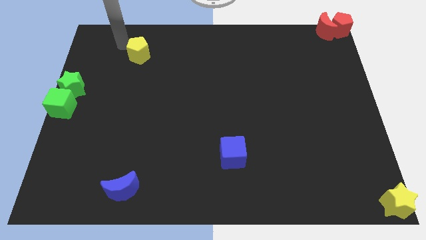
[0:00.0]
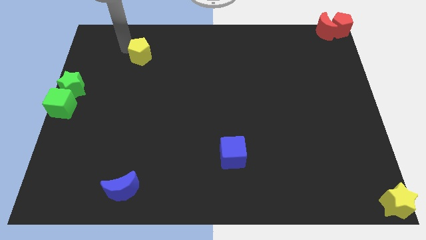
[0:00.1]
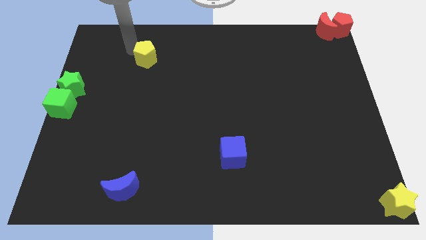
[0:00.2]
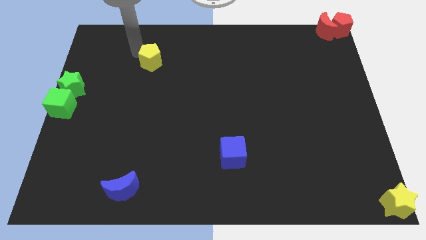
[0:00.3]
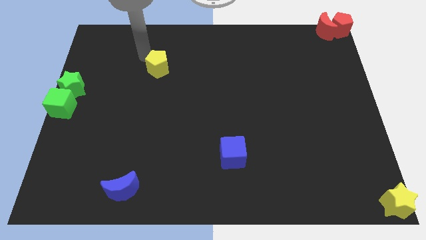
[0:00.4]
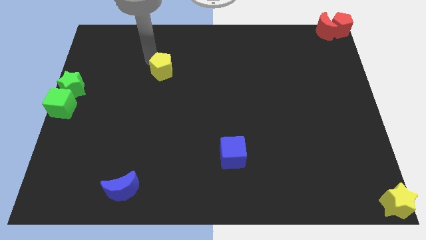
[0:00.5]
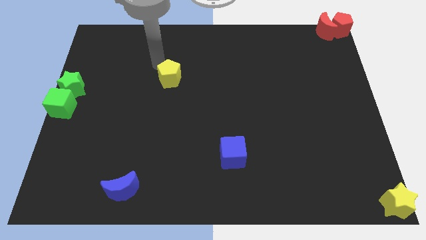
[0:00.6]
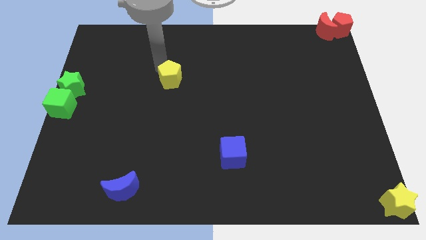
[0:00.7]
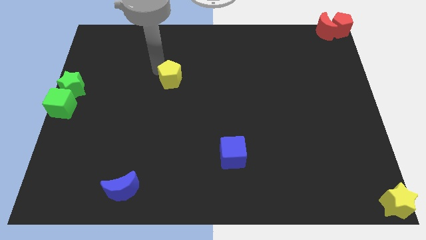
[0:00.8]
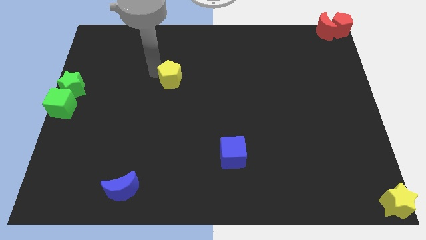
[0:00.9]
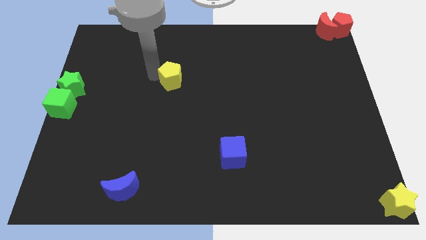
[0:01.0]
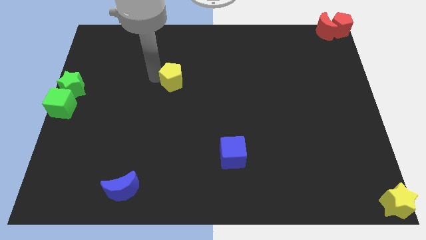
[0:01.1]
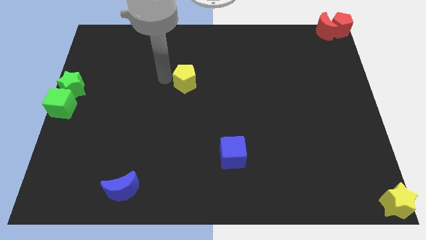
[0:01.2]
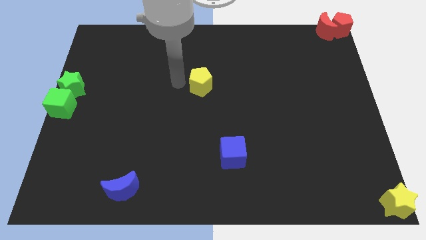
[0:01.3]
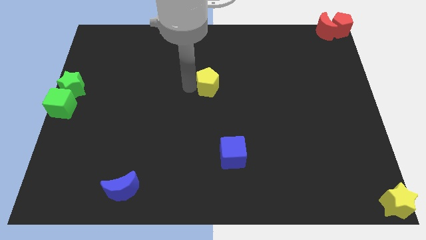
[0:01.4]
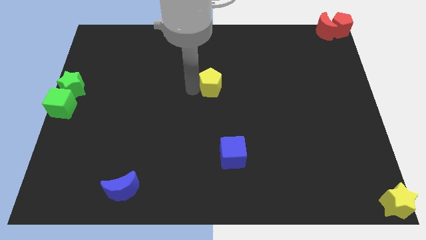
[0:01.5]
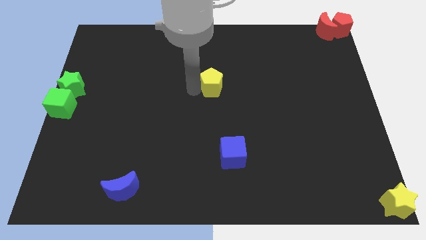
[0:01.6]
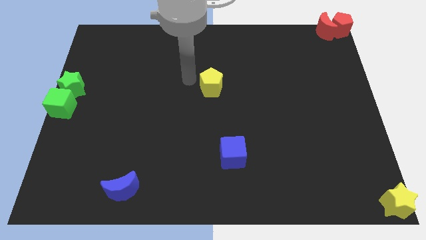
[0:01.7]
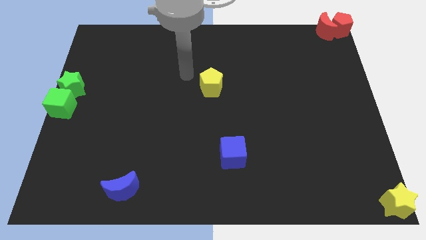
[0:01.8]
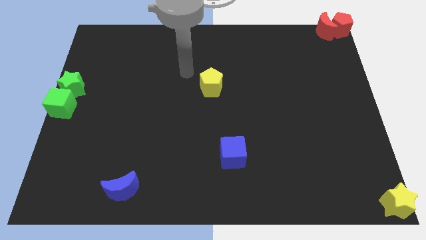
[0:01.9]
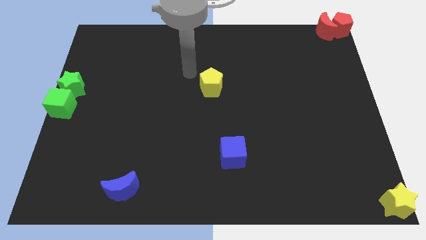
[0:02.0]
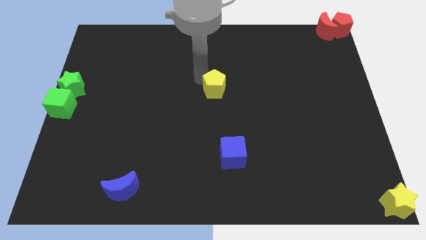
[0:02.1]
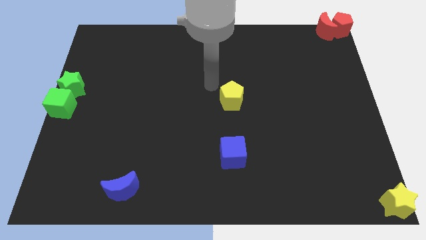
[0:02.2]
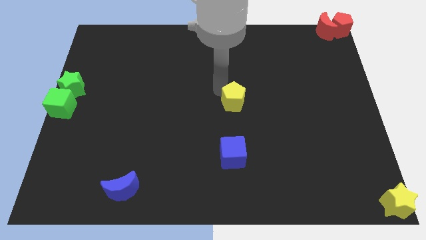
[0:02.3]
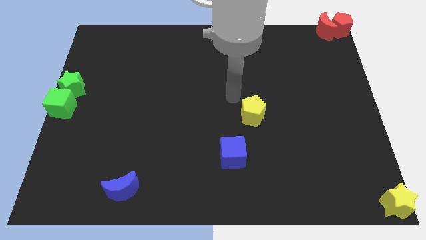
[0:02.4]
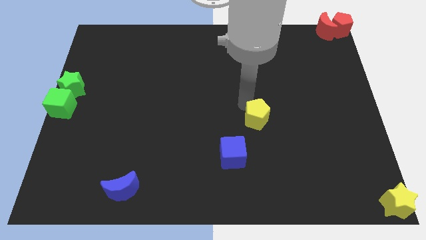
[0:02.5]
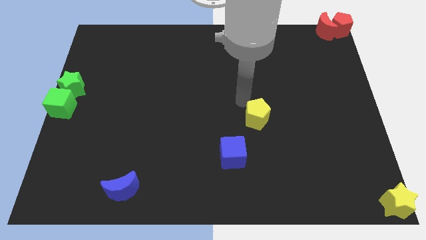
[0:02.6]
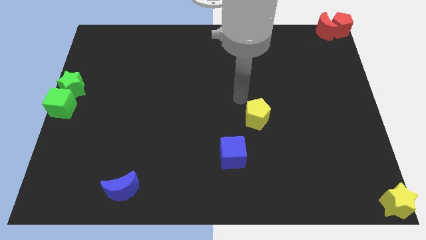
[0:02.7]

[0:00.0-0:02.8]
push the yellow pentagon diagonally towards the blue cube

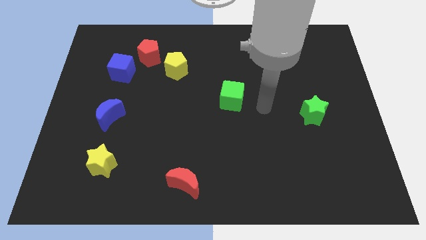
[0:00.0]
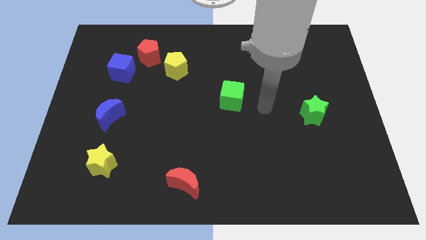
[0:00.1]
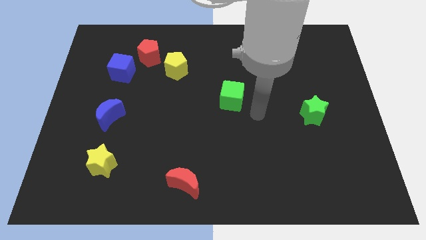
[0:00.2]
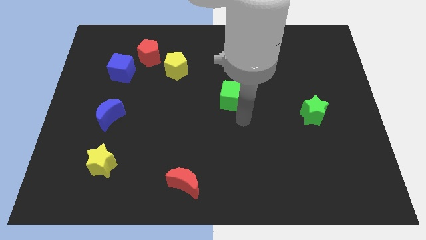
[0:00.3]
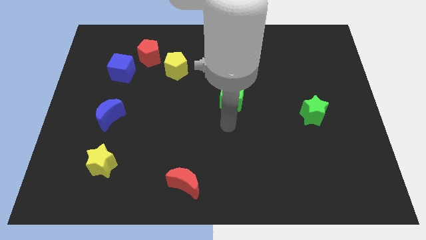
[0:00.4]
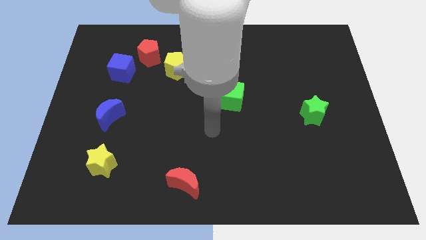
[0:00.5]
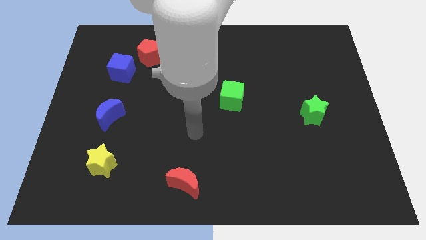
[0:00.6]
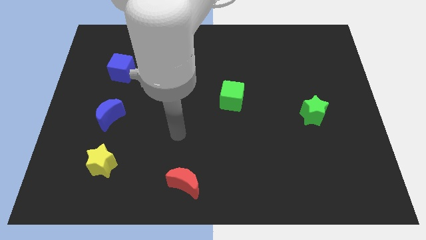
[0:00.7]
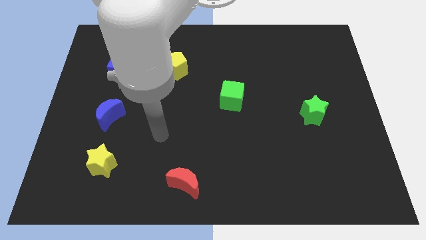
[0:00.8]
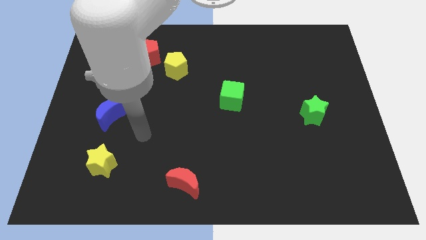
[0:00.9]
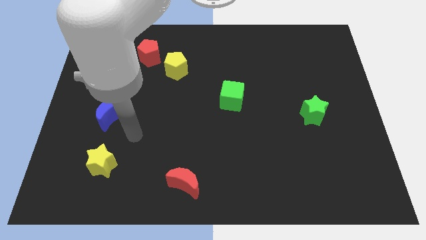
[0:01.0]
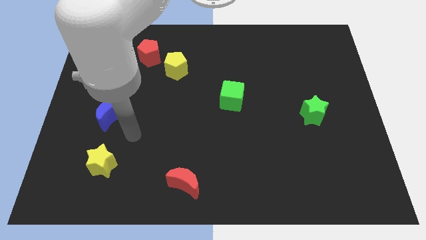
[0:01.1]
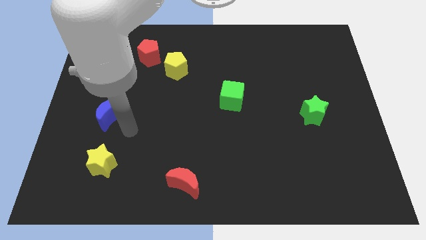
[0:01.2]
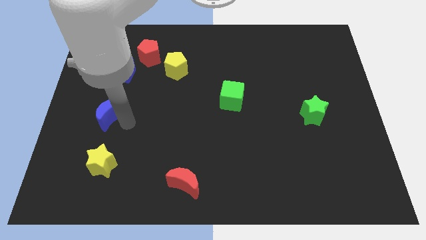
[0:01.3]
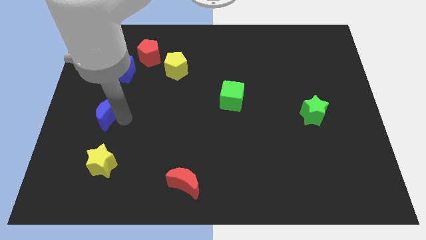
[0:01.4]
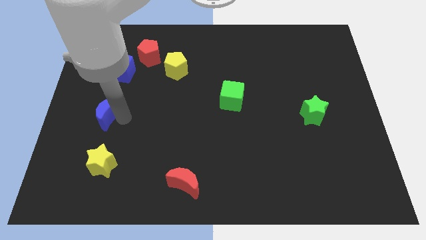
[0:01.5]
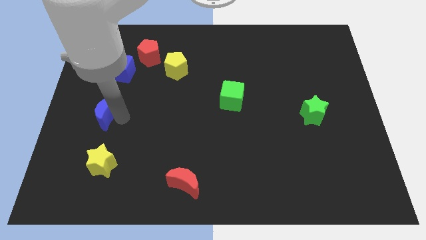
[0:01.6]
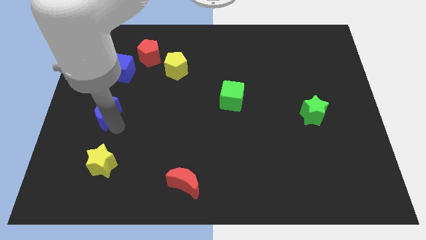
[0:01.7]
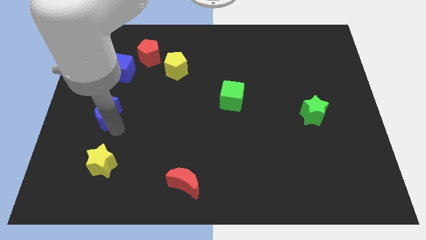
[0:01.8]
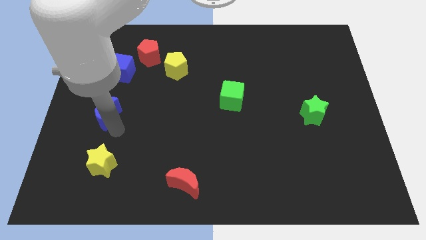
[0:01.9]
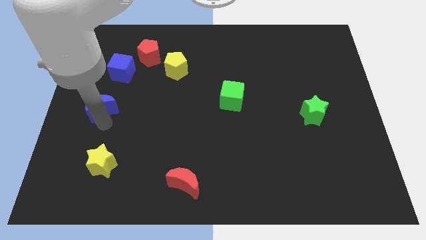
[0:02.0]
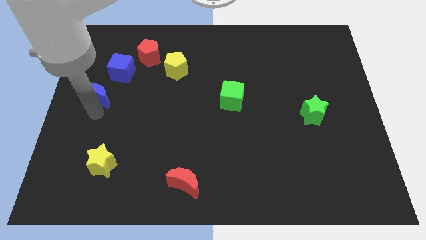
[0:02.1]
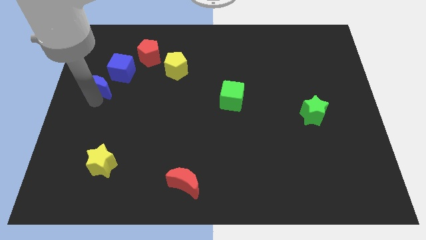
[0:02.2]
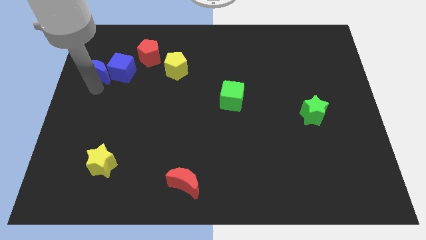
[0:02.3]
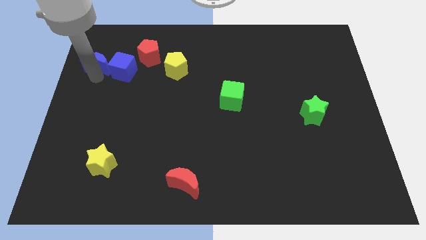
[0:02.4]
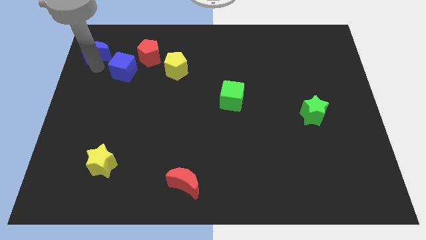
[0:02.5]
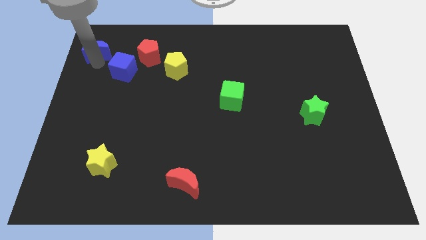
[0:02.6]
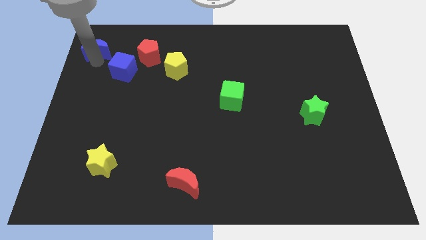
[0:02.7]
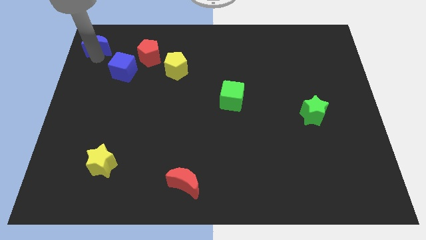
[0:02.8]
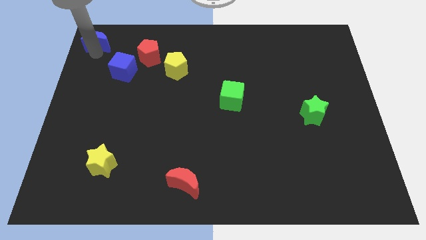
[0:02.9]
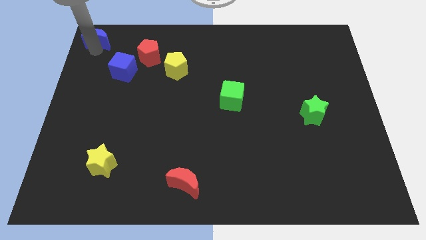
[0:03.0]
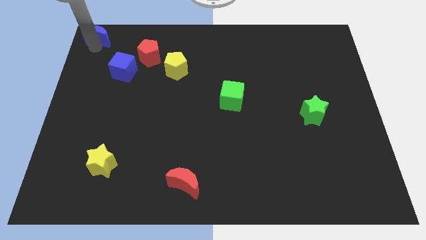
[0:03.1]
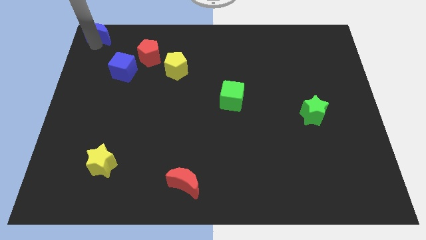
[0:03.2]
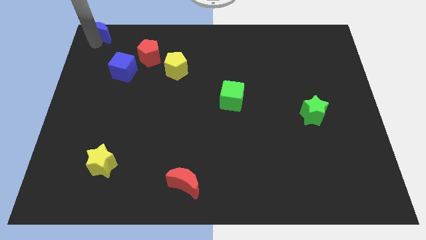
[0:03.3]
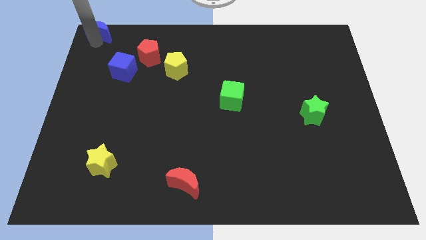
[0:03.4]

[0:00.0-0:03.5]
place the blue moon above the blue cube

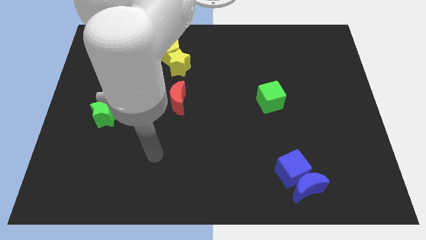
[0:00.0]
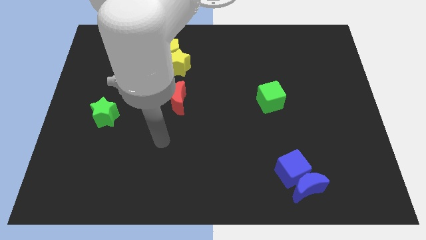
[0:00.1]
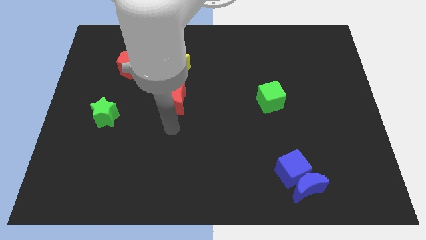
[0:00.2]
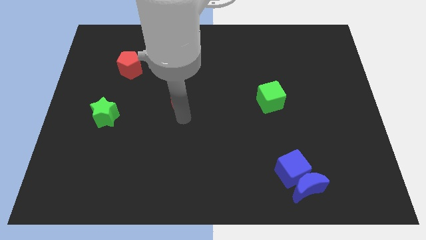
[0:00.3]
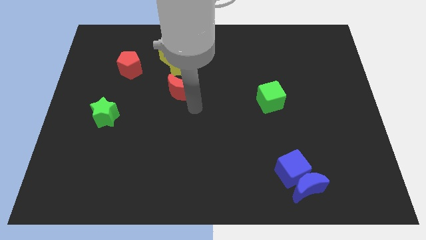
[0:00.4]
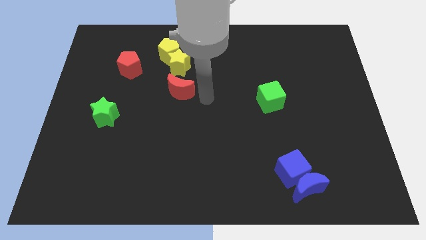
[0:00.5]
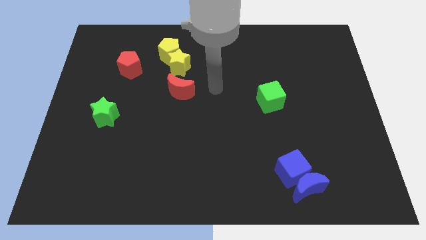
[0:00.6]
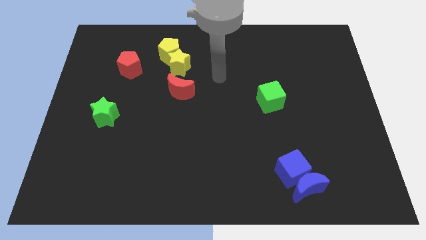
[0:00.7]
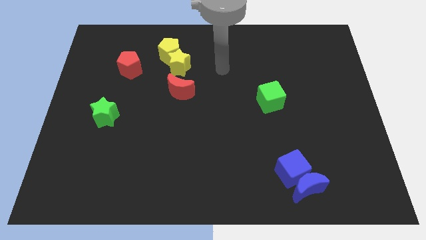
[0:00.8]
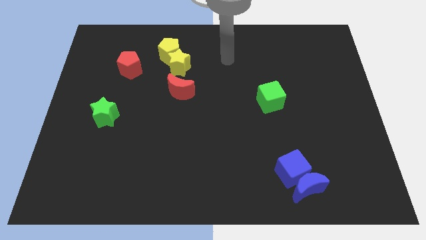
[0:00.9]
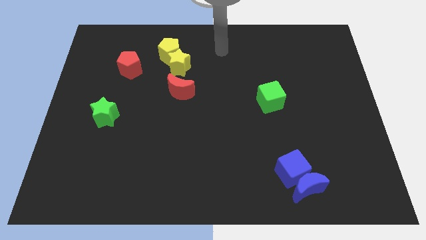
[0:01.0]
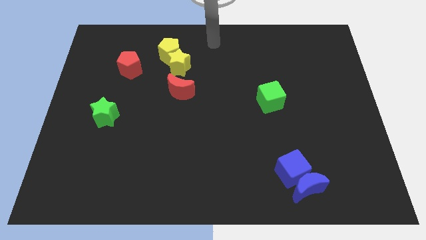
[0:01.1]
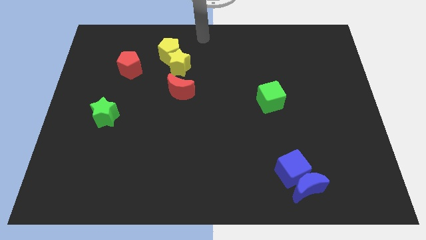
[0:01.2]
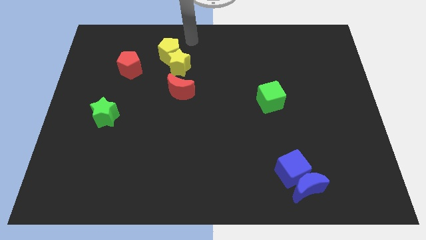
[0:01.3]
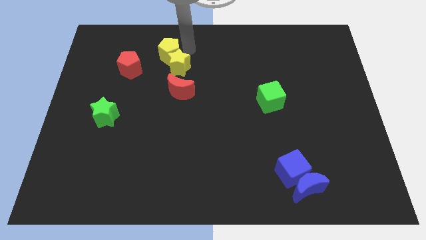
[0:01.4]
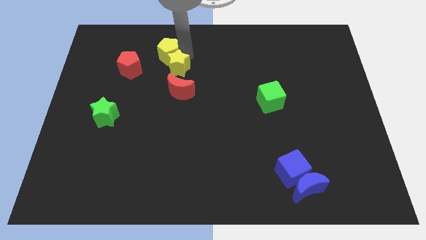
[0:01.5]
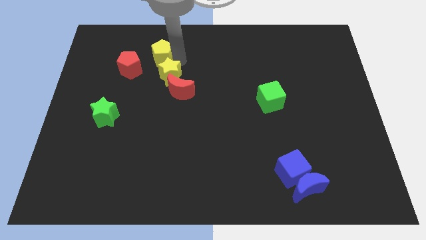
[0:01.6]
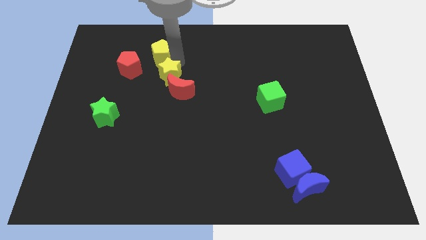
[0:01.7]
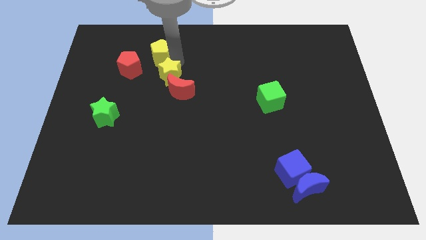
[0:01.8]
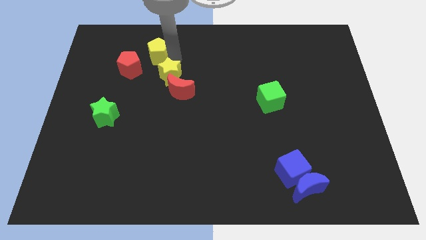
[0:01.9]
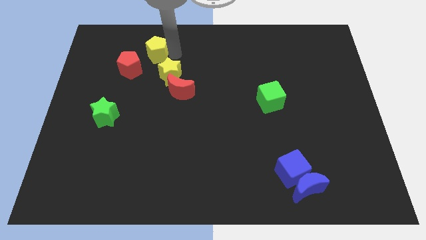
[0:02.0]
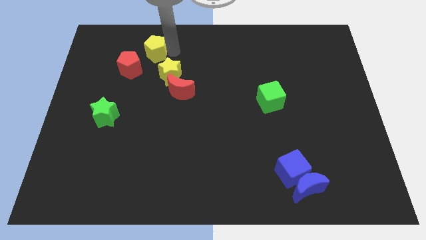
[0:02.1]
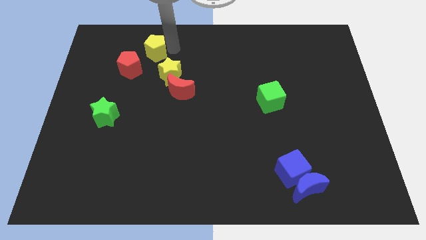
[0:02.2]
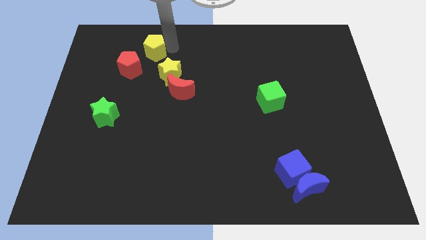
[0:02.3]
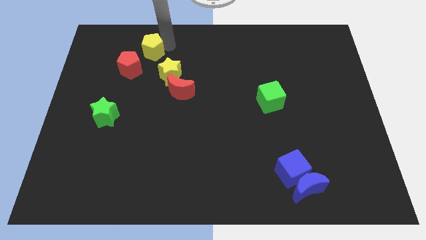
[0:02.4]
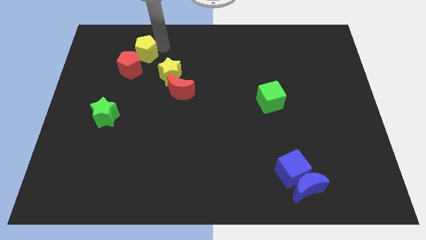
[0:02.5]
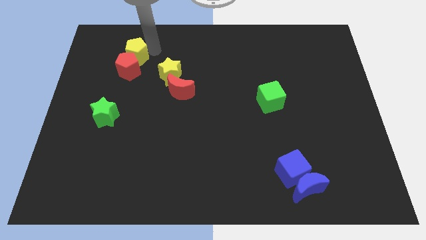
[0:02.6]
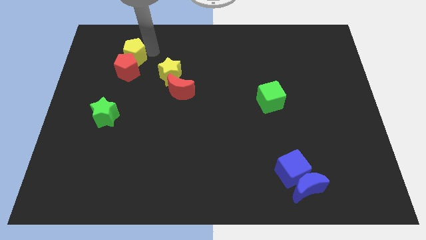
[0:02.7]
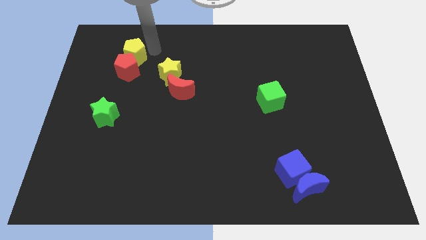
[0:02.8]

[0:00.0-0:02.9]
separate the yellow pentagon with yellow star close to the red pentagon
